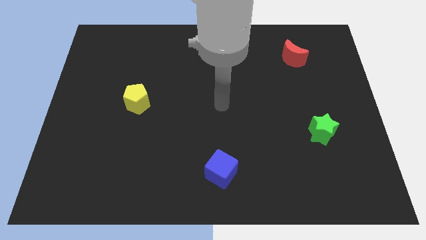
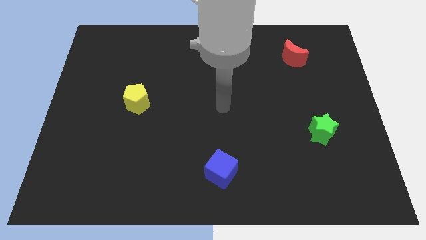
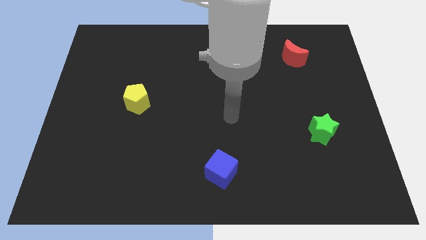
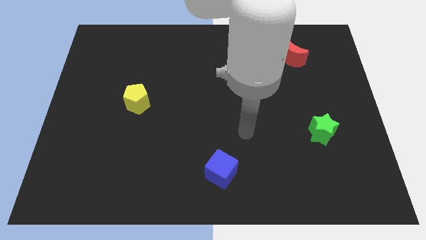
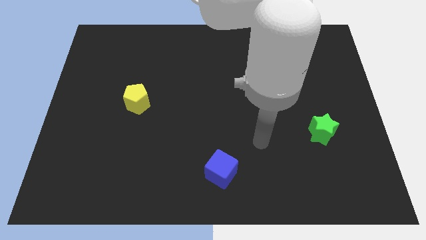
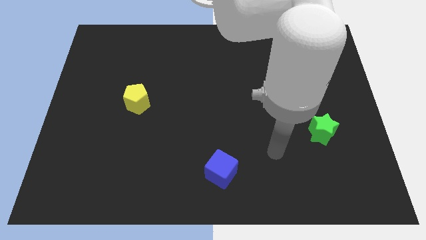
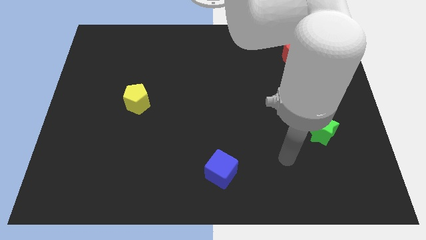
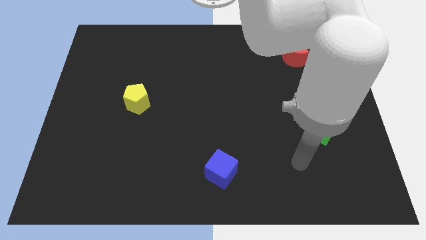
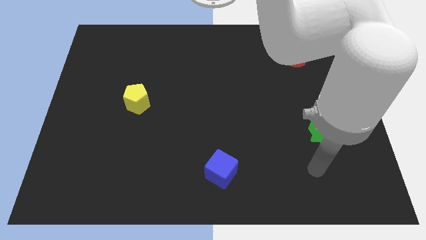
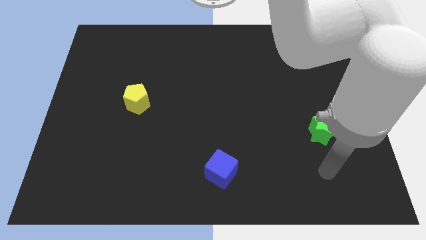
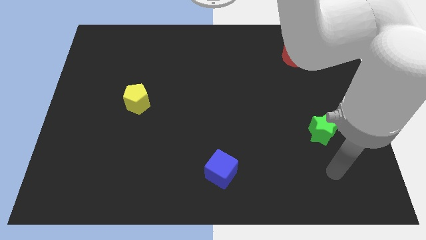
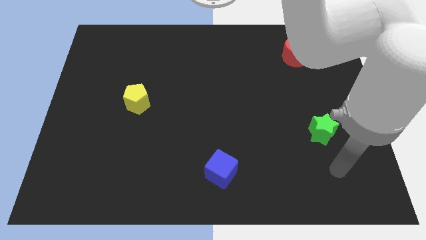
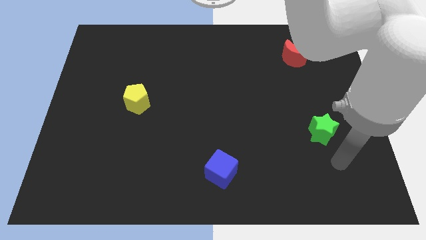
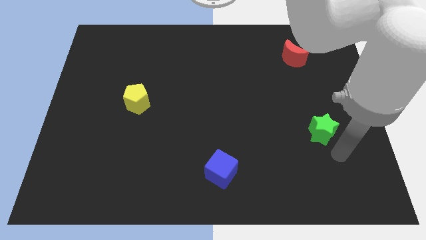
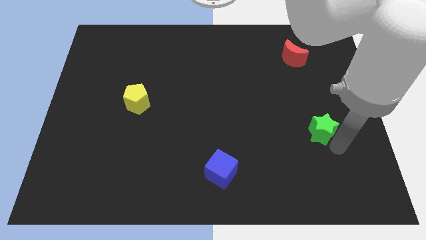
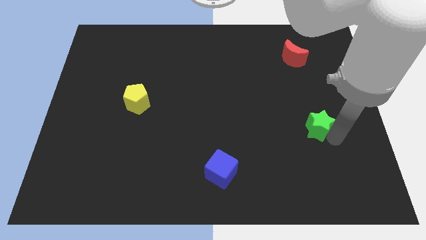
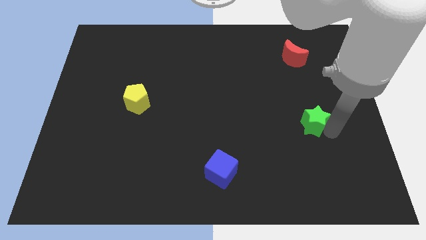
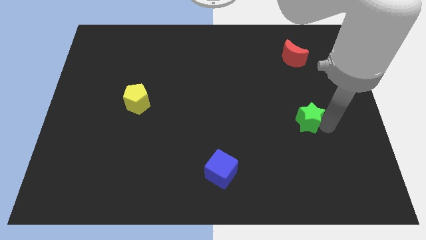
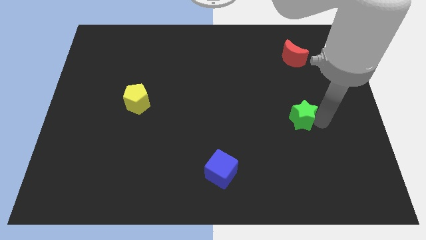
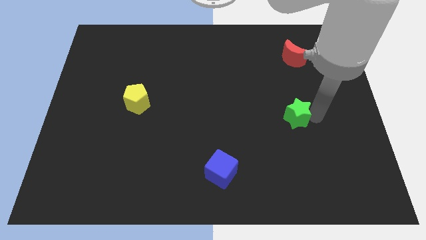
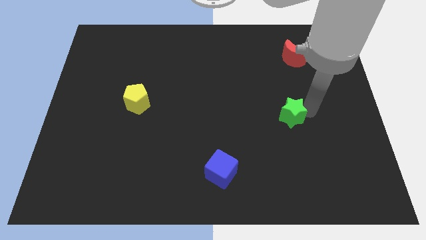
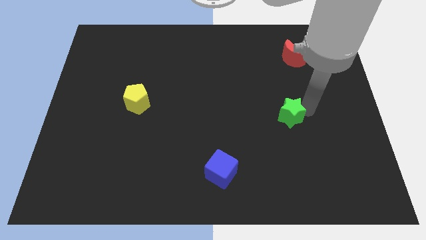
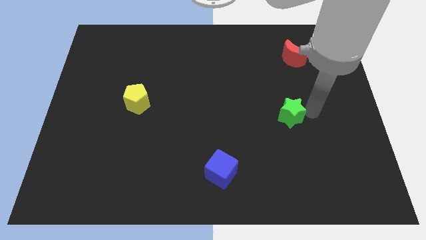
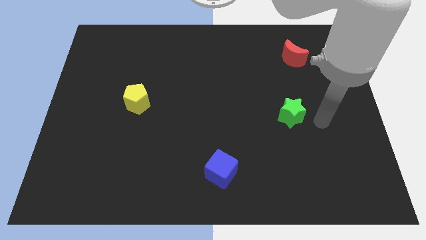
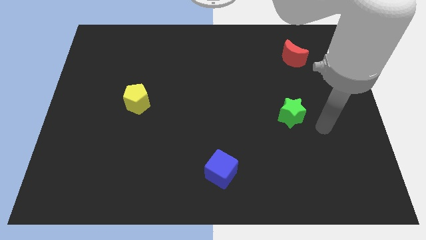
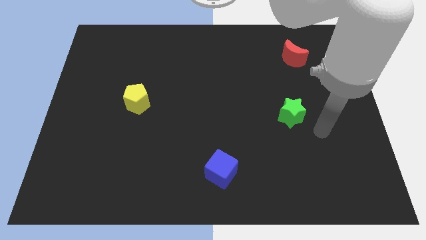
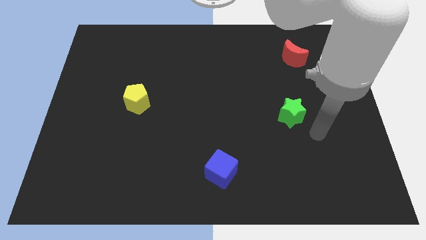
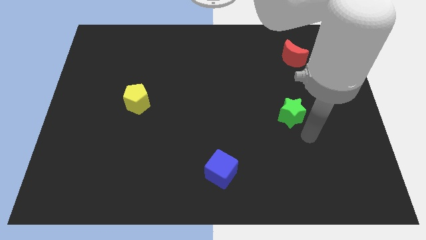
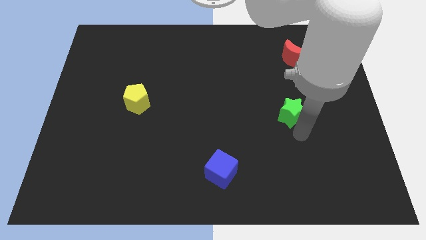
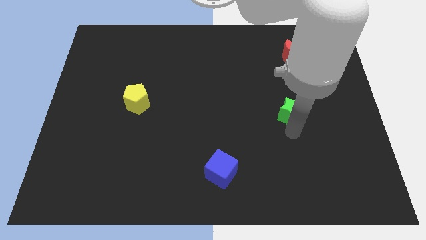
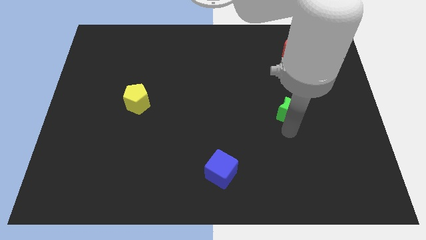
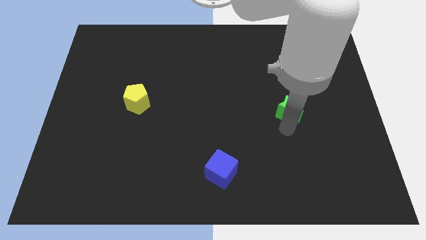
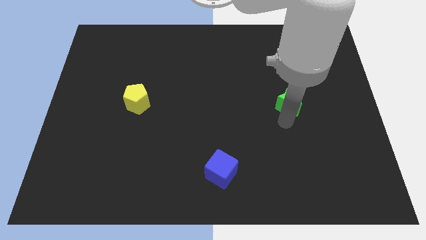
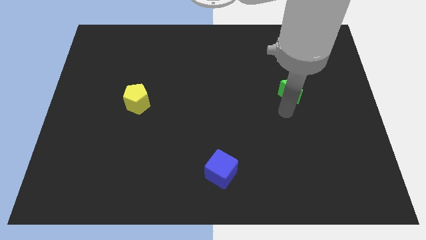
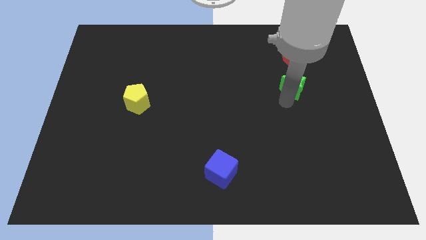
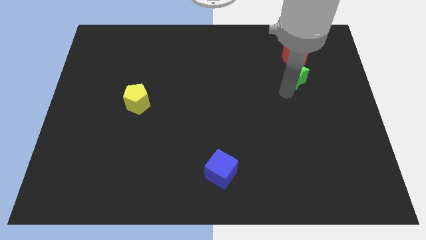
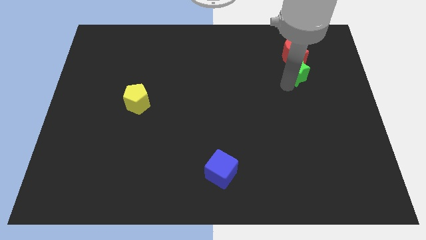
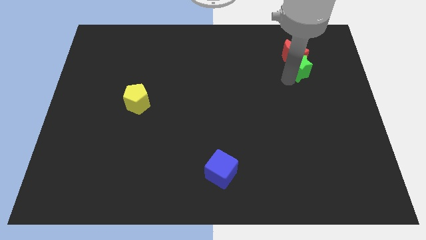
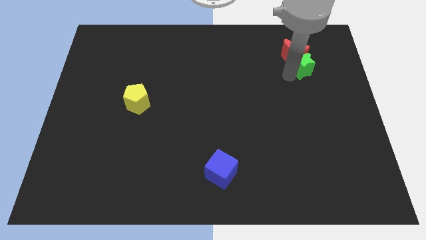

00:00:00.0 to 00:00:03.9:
push the green block next to the red moon

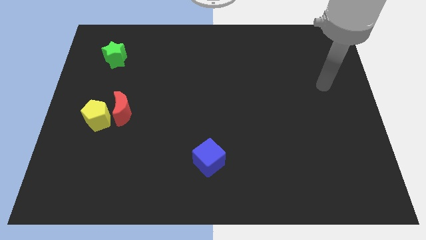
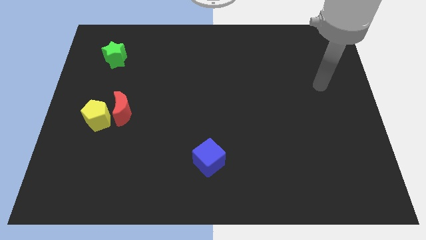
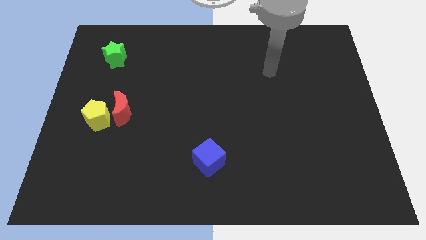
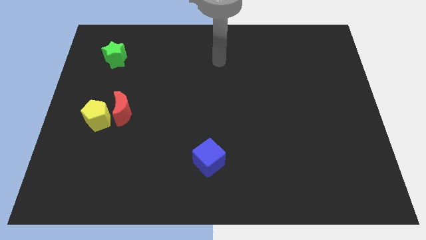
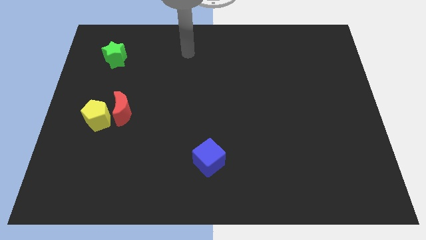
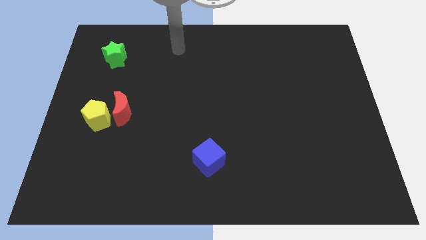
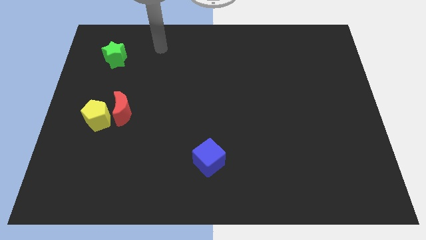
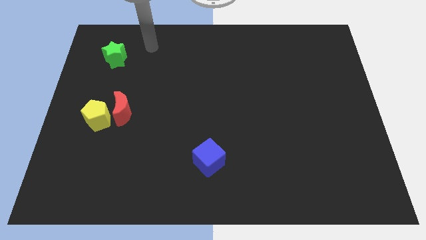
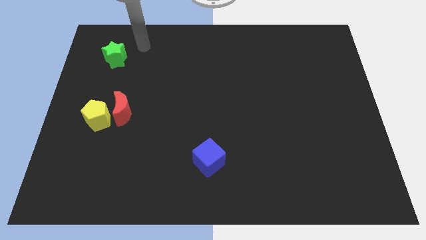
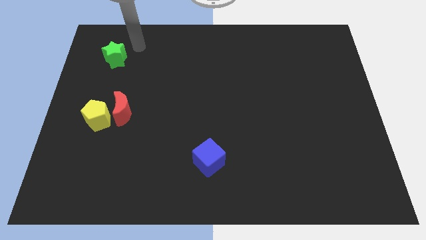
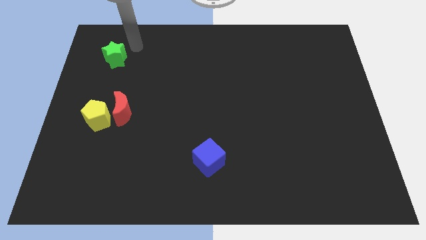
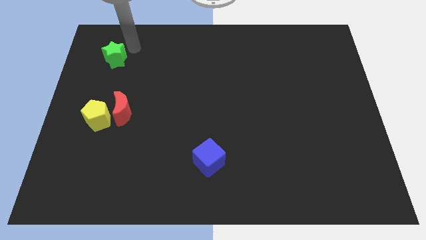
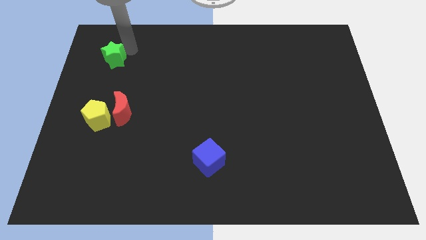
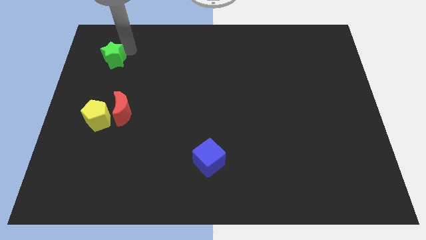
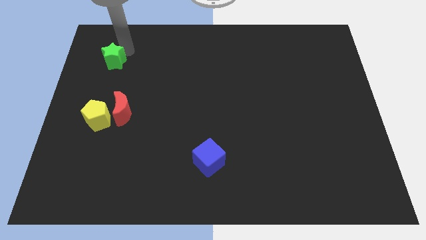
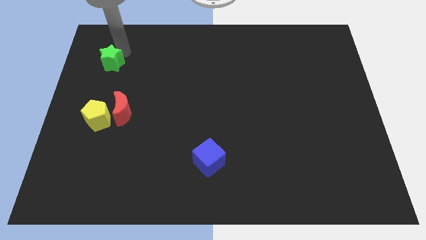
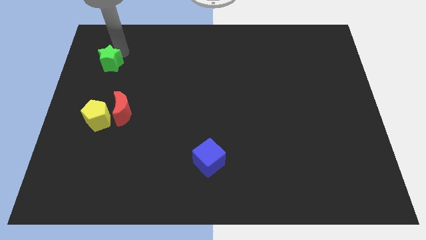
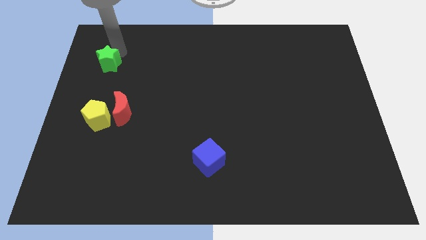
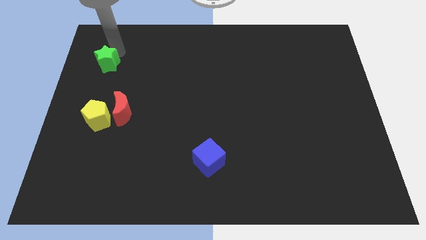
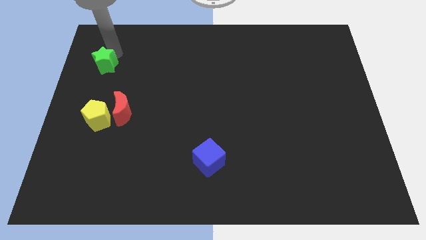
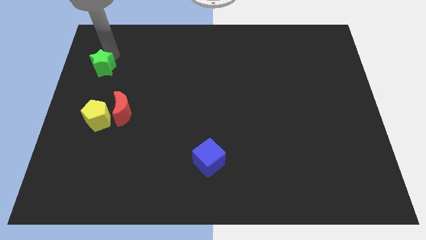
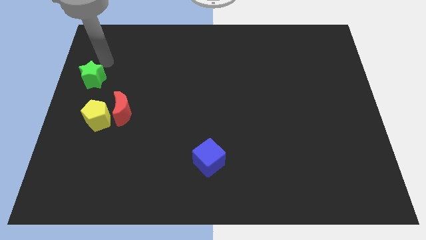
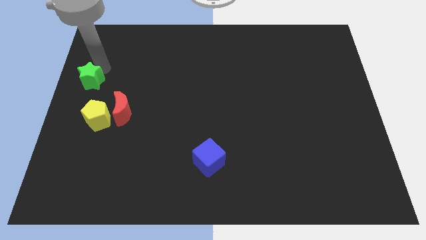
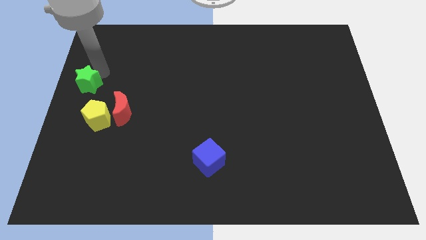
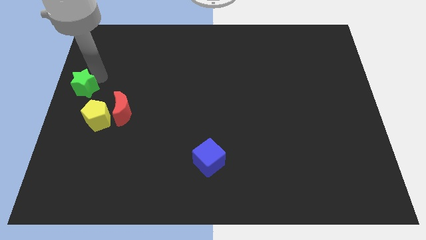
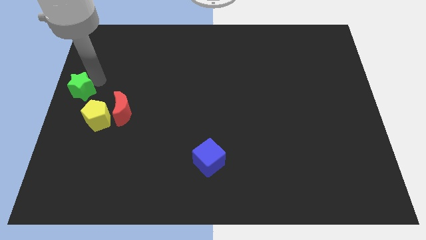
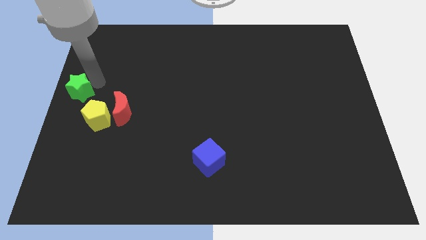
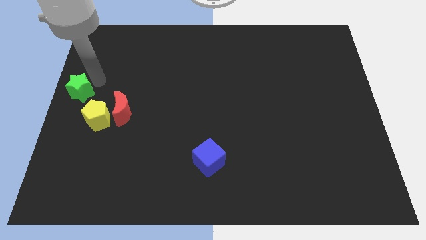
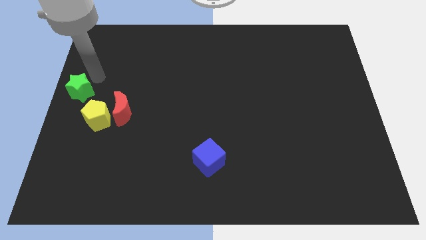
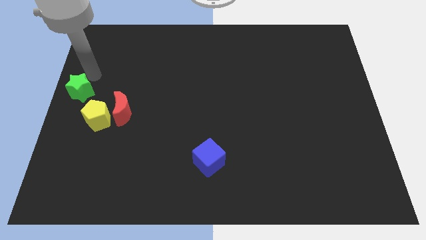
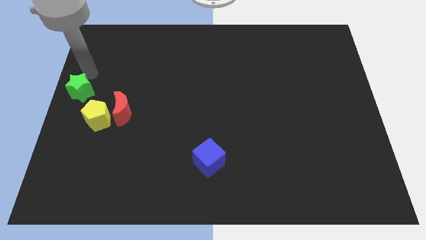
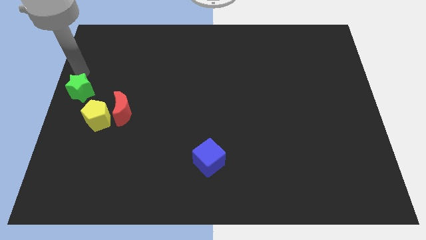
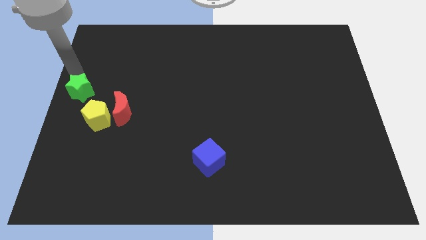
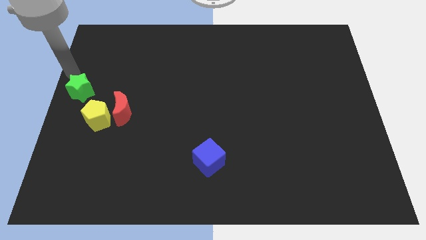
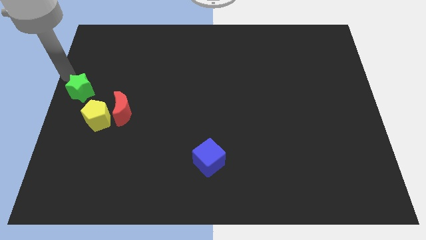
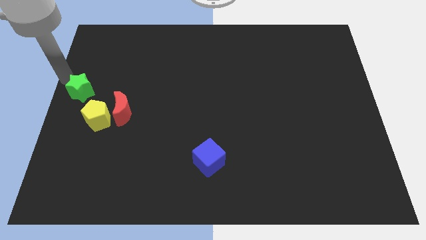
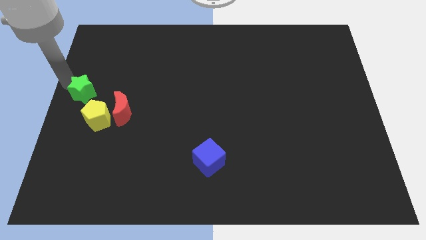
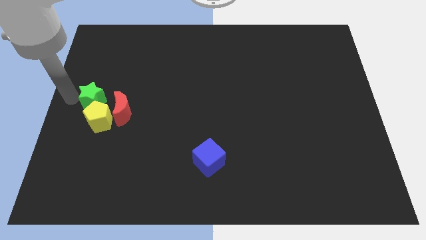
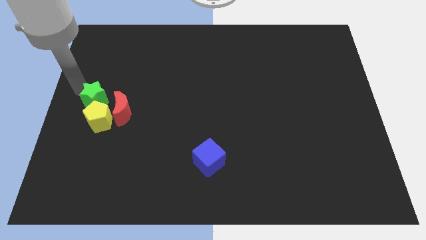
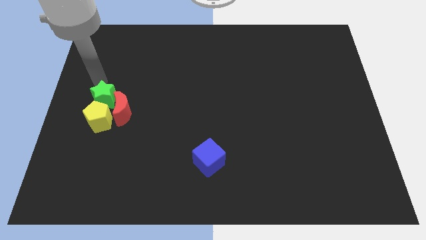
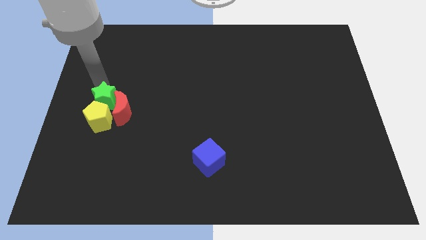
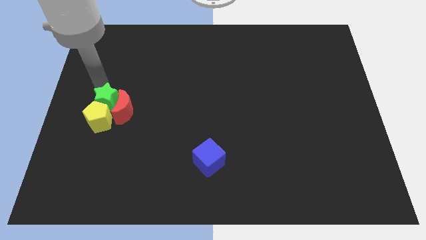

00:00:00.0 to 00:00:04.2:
move the green star close to the yellow pentagon

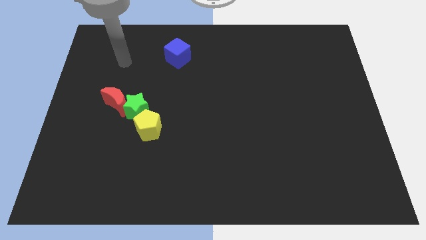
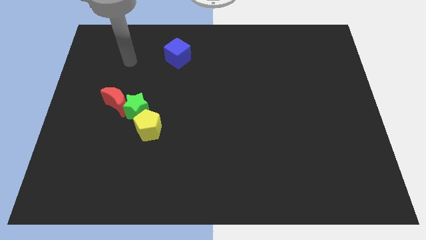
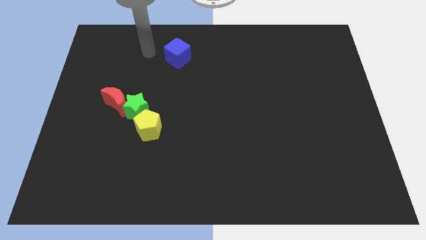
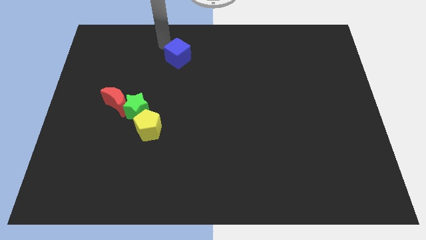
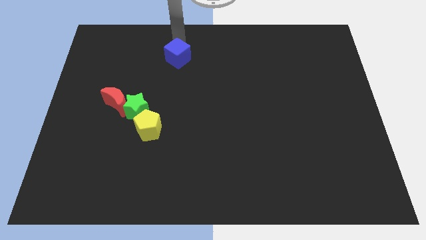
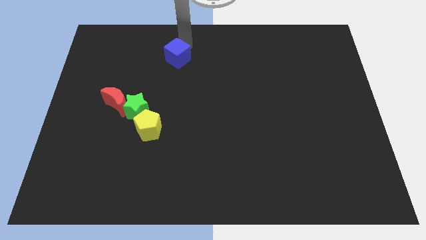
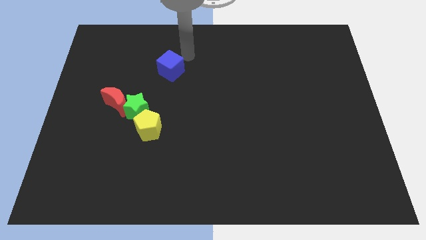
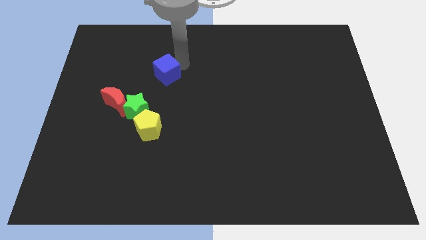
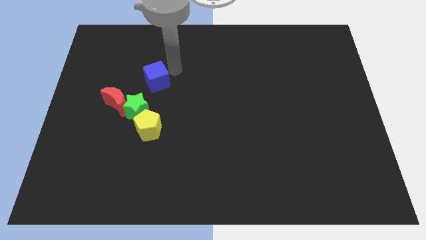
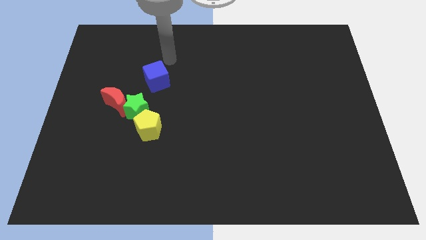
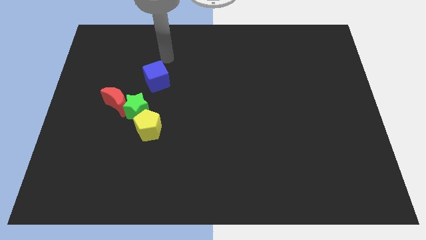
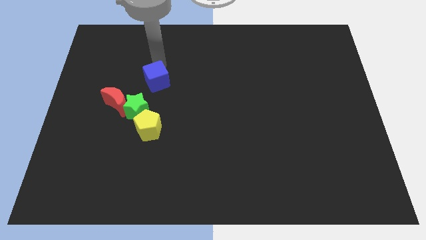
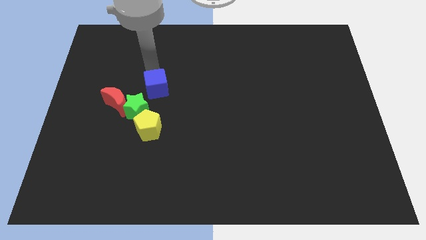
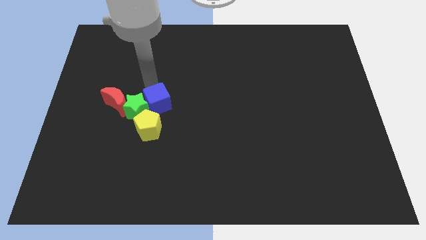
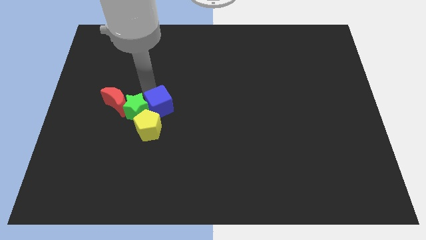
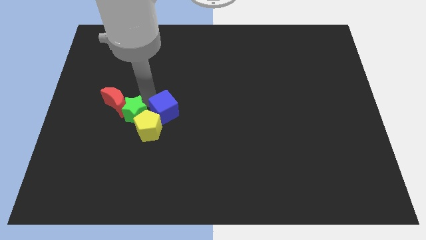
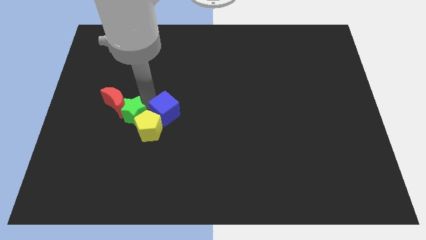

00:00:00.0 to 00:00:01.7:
put the blue cube to the pentagon
